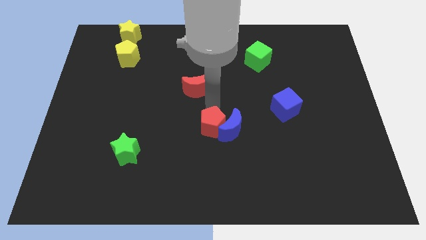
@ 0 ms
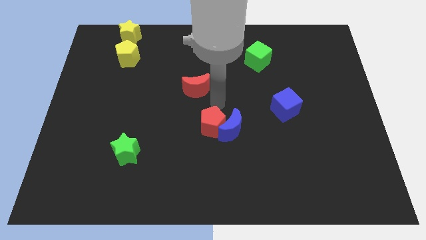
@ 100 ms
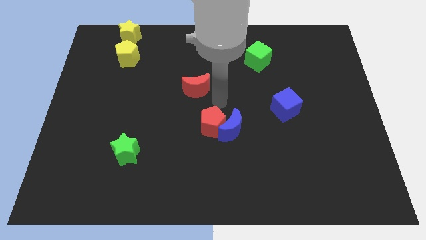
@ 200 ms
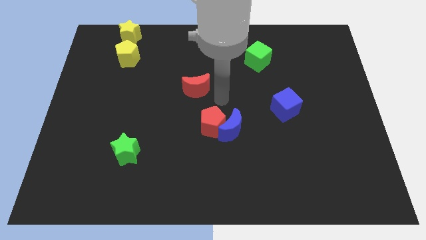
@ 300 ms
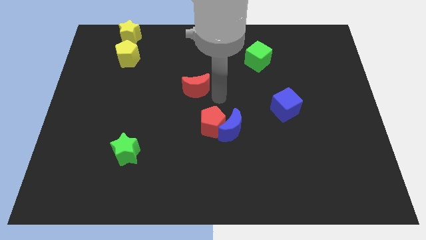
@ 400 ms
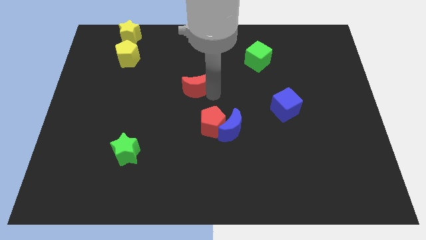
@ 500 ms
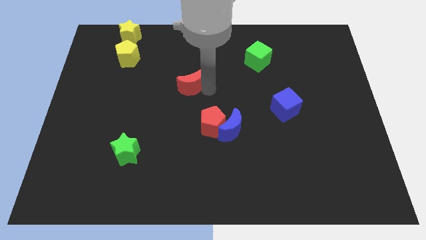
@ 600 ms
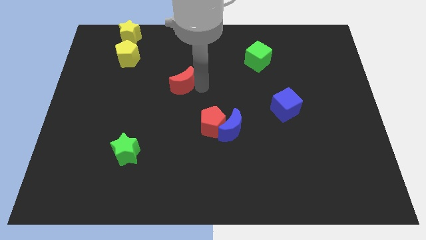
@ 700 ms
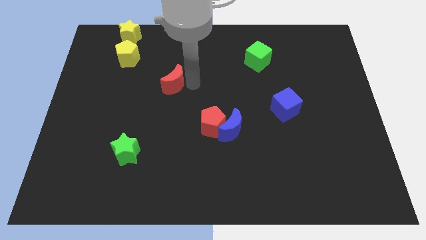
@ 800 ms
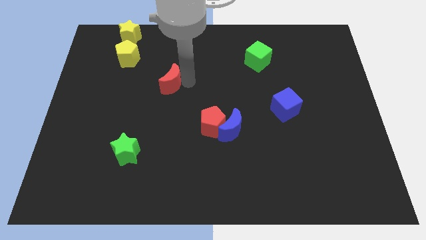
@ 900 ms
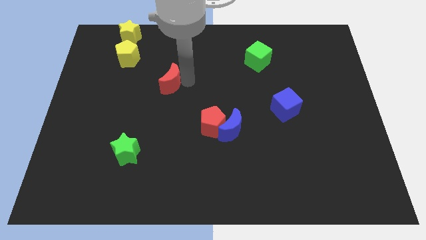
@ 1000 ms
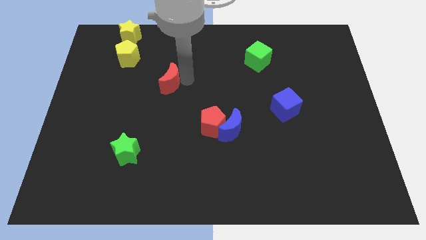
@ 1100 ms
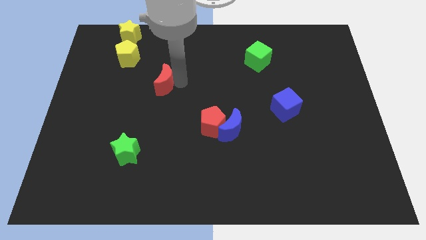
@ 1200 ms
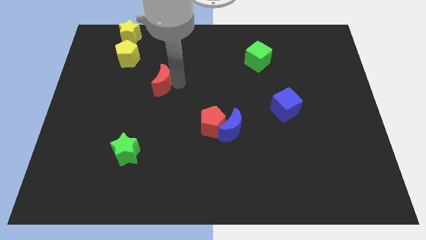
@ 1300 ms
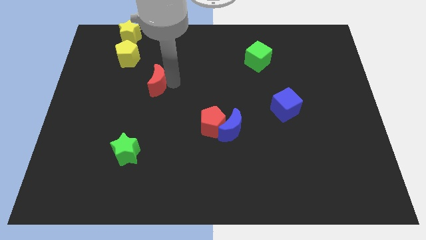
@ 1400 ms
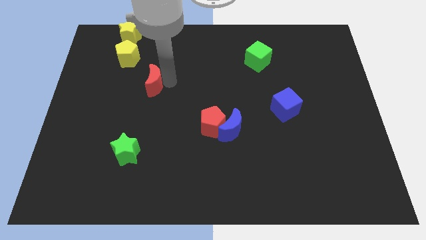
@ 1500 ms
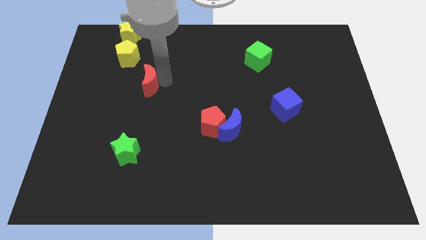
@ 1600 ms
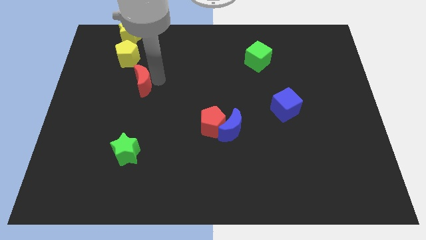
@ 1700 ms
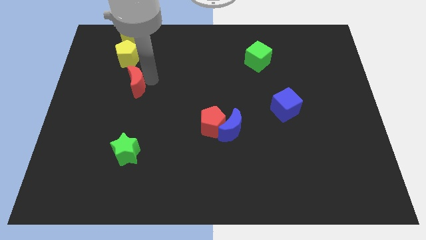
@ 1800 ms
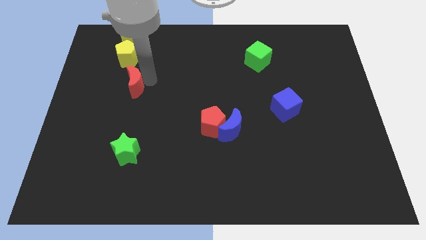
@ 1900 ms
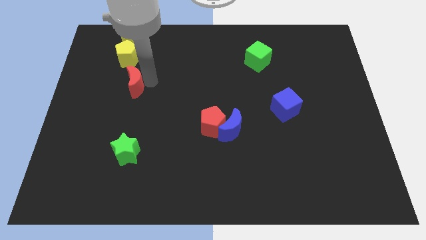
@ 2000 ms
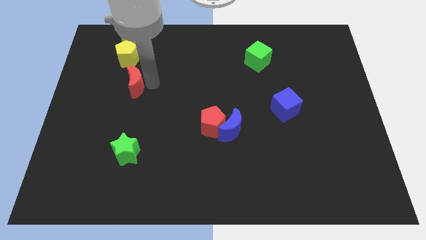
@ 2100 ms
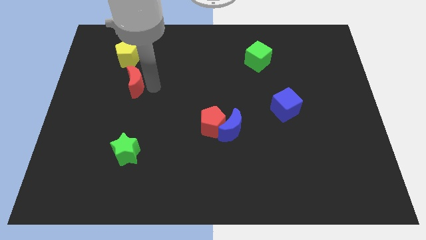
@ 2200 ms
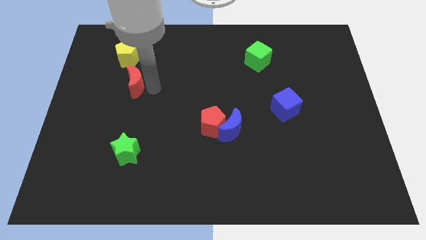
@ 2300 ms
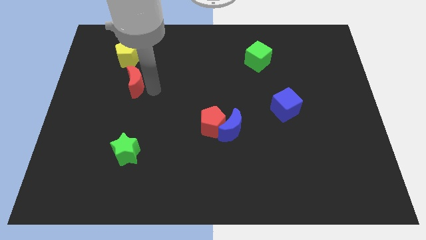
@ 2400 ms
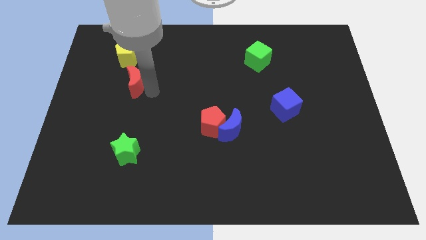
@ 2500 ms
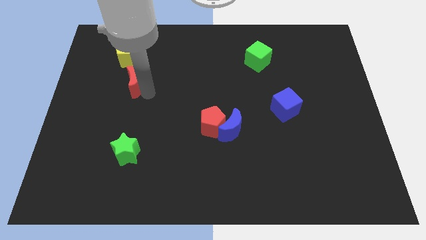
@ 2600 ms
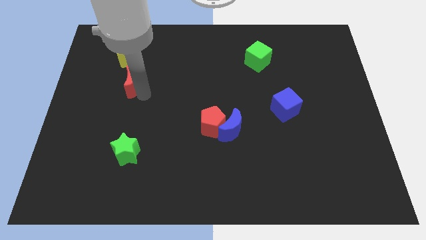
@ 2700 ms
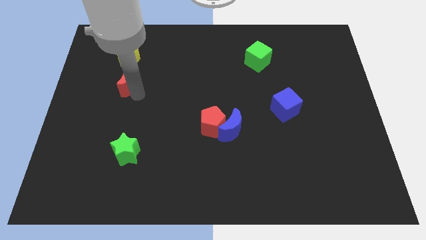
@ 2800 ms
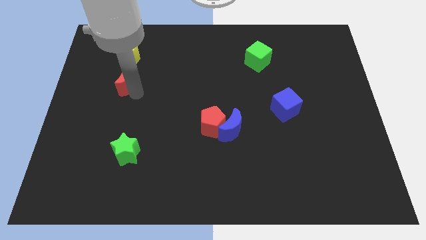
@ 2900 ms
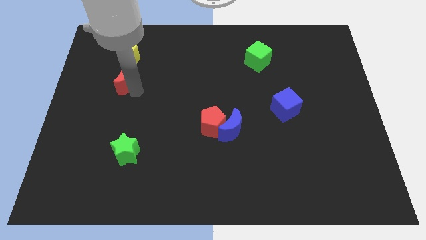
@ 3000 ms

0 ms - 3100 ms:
slide red moon away from the center

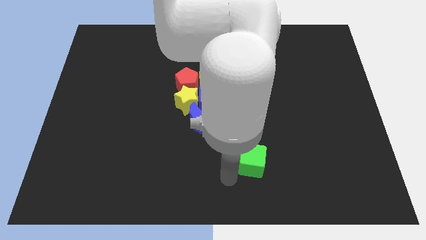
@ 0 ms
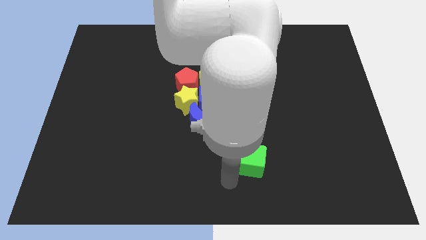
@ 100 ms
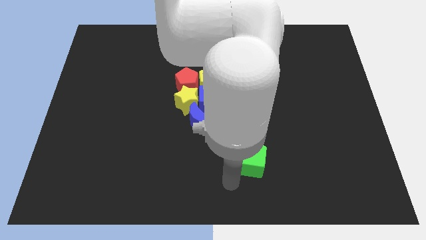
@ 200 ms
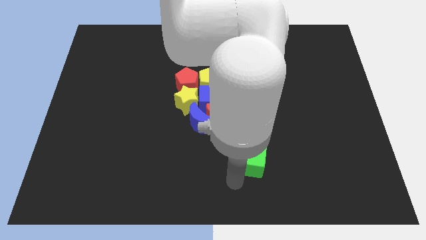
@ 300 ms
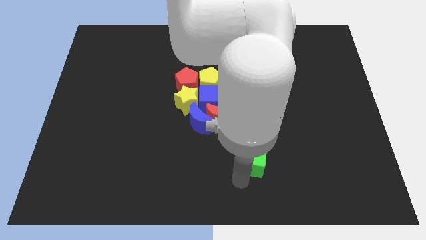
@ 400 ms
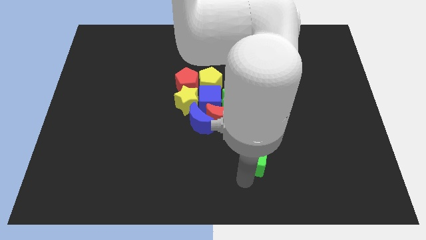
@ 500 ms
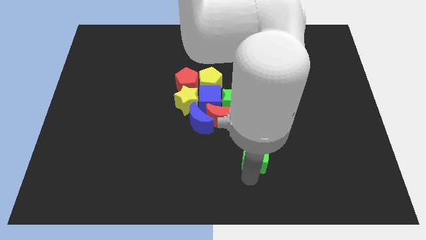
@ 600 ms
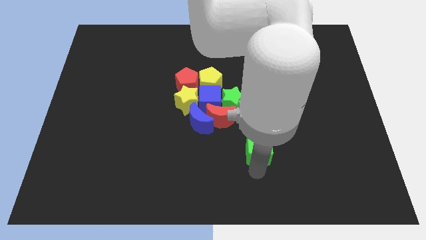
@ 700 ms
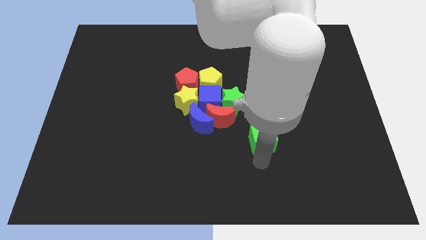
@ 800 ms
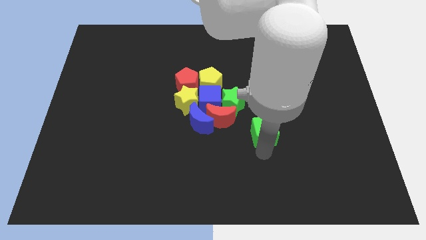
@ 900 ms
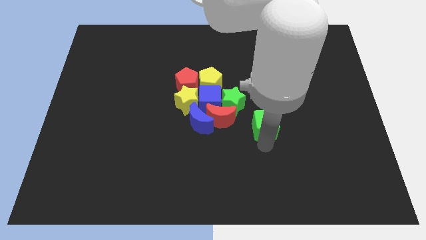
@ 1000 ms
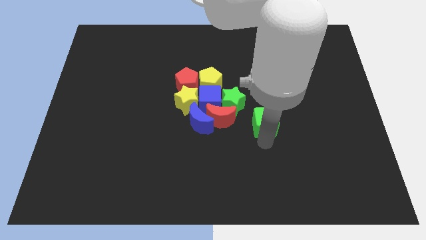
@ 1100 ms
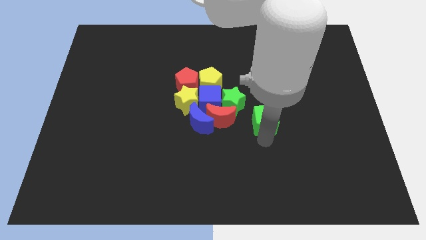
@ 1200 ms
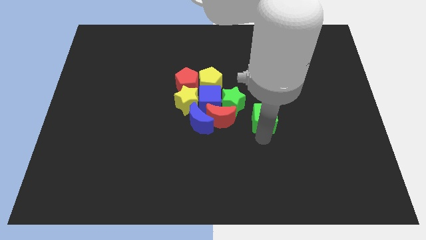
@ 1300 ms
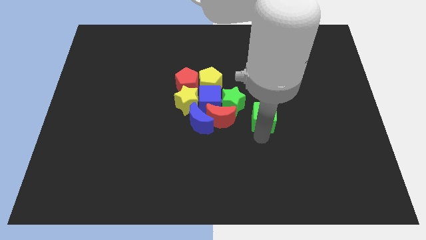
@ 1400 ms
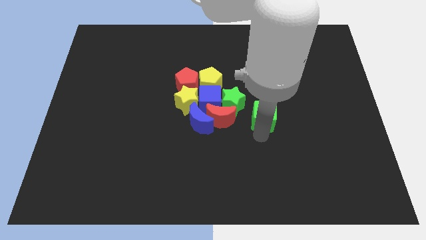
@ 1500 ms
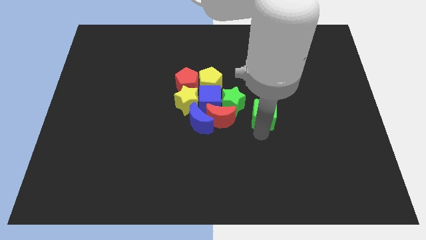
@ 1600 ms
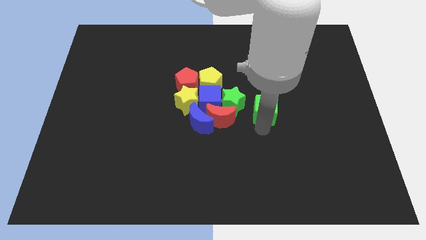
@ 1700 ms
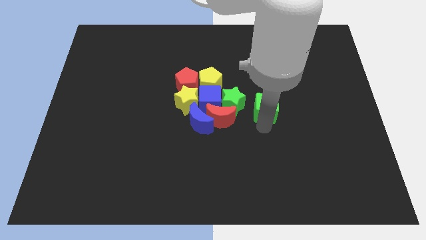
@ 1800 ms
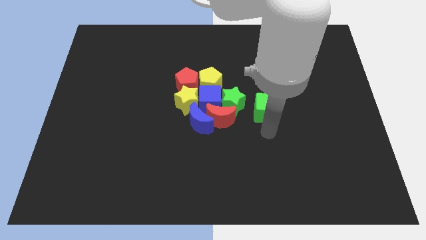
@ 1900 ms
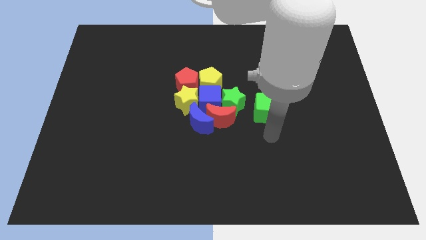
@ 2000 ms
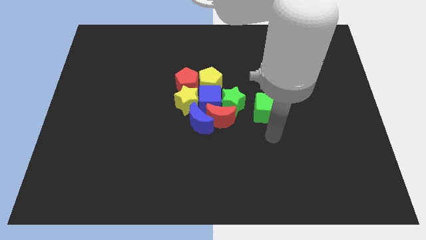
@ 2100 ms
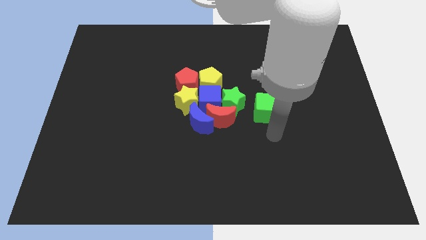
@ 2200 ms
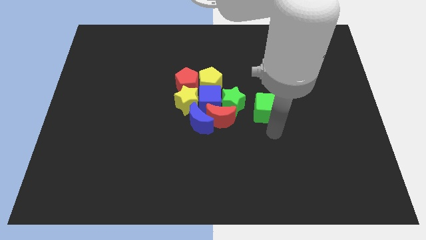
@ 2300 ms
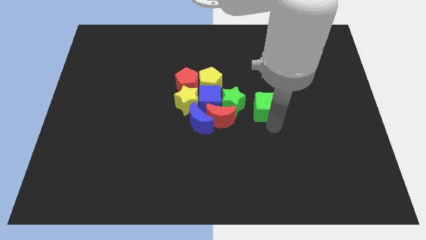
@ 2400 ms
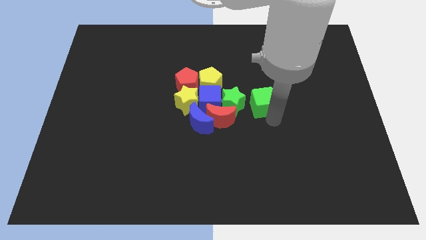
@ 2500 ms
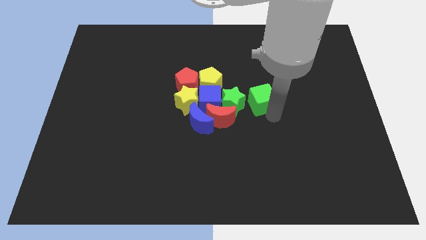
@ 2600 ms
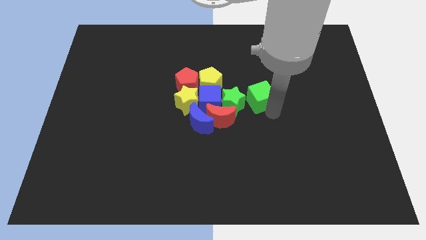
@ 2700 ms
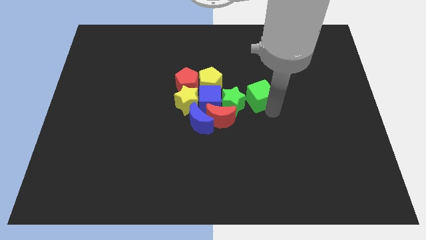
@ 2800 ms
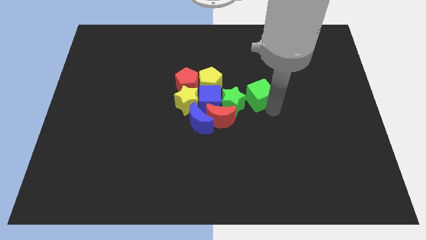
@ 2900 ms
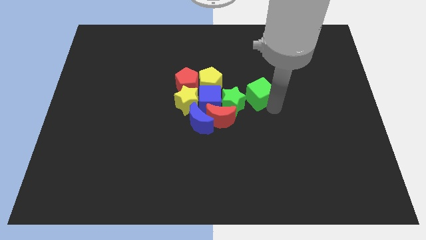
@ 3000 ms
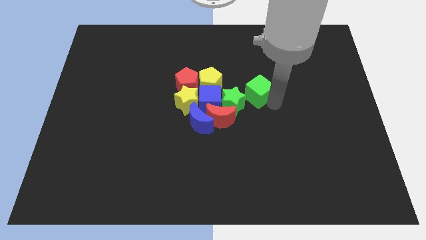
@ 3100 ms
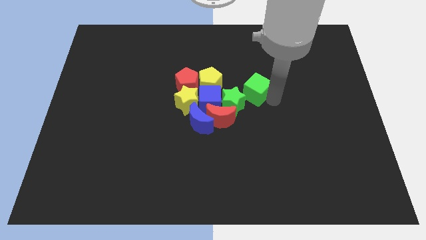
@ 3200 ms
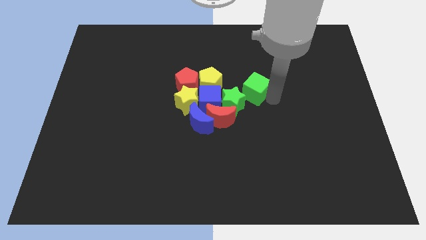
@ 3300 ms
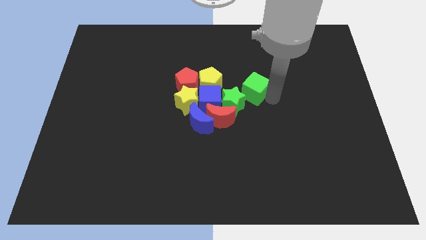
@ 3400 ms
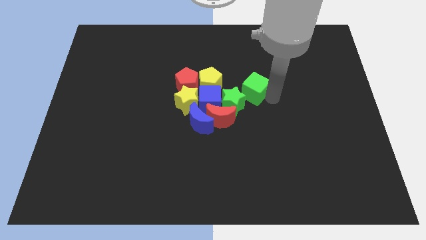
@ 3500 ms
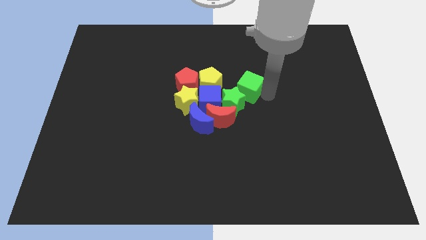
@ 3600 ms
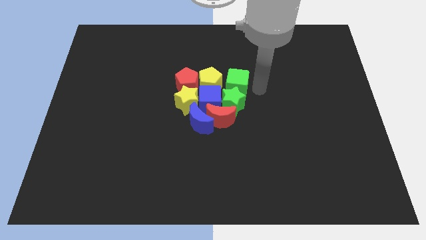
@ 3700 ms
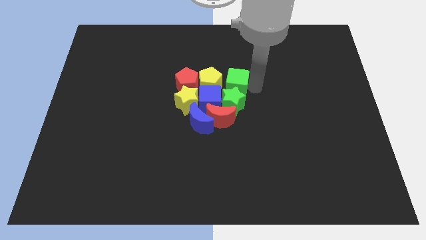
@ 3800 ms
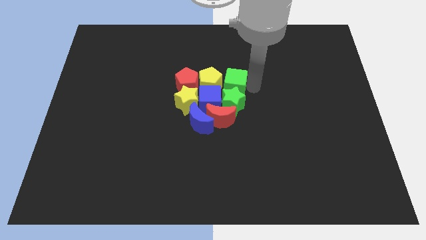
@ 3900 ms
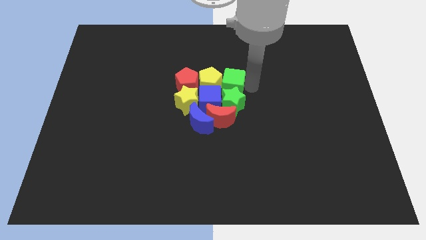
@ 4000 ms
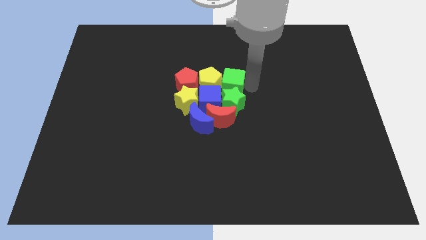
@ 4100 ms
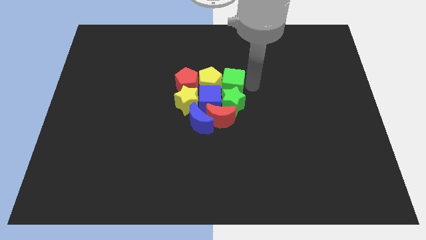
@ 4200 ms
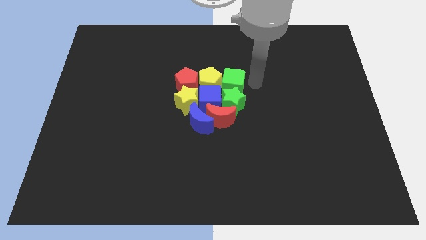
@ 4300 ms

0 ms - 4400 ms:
push the green cube into the group of the blocks

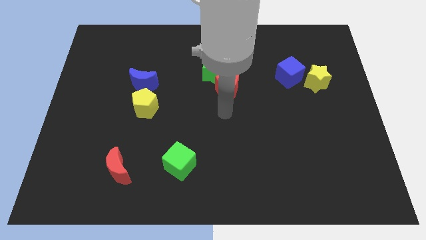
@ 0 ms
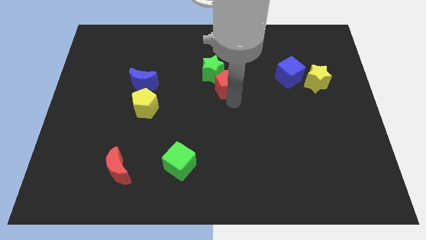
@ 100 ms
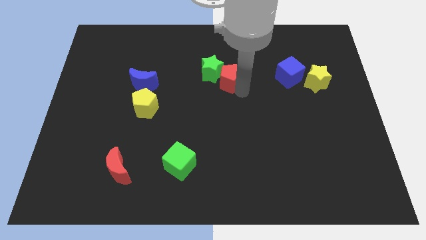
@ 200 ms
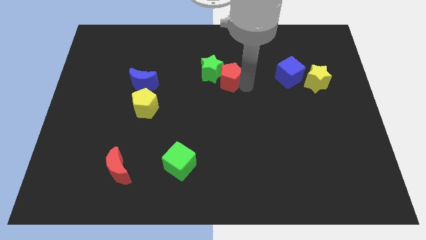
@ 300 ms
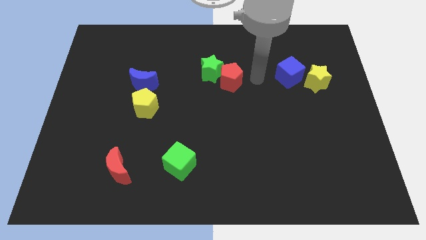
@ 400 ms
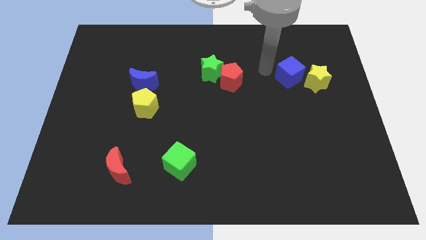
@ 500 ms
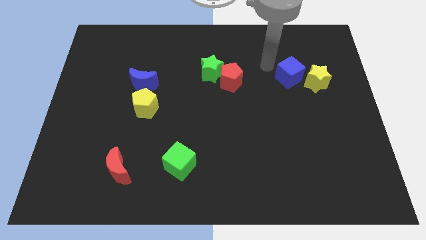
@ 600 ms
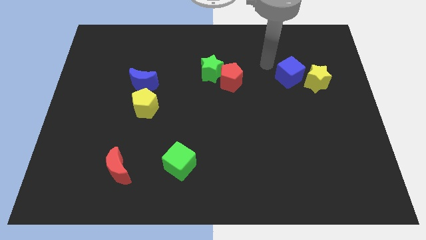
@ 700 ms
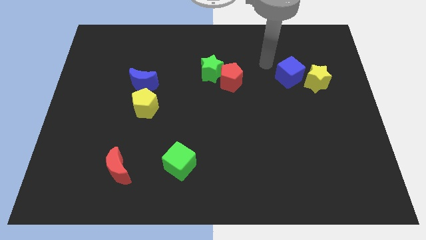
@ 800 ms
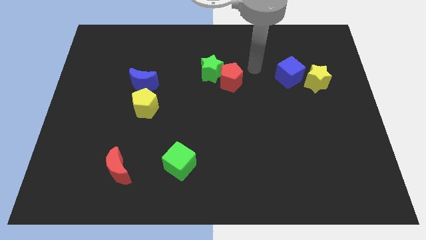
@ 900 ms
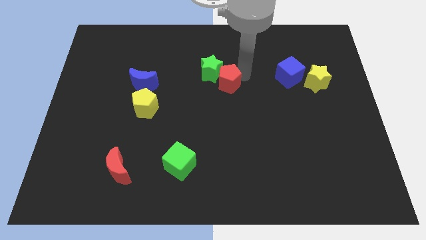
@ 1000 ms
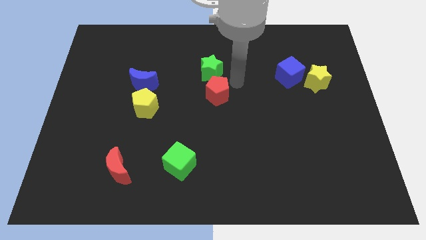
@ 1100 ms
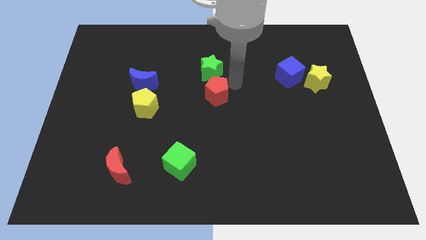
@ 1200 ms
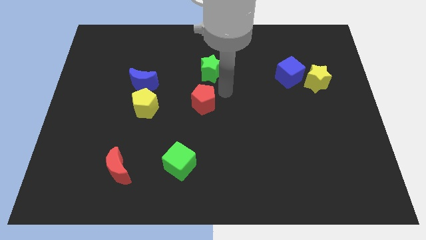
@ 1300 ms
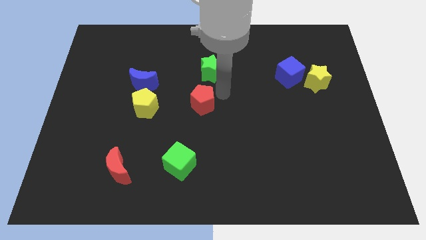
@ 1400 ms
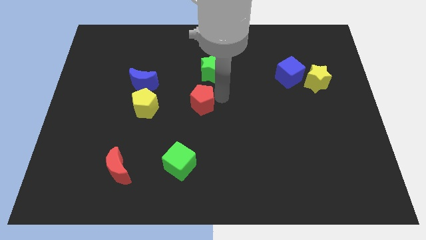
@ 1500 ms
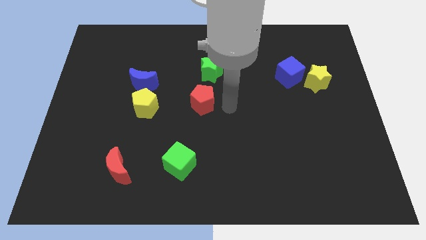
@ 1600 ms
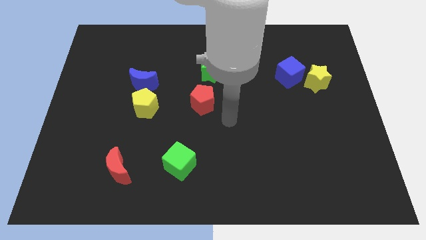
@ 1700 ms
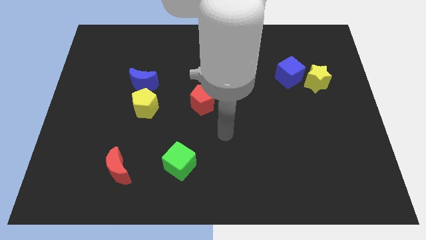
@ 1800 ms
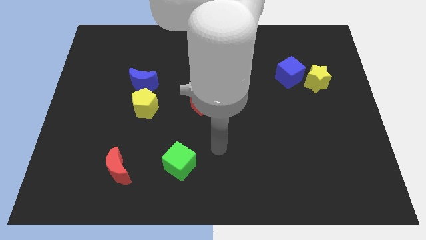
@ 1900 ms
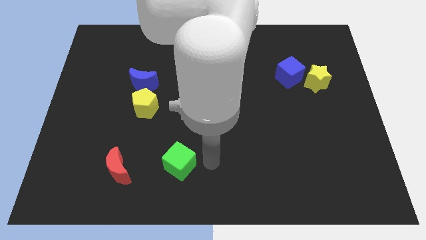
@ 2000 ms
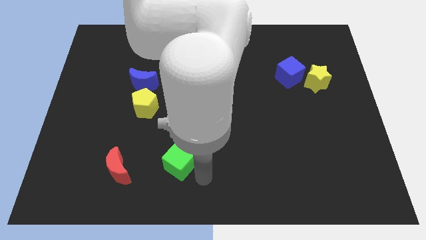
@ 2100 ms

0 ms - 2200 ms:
slightly move the red pentagon towards the center of the board
